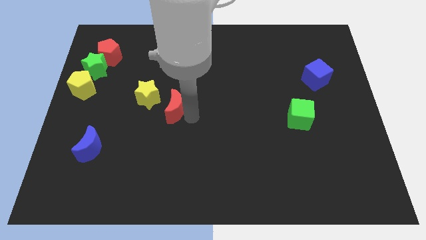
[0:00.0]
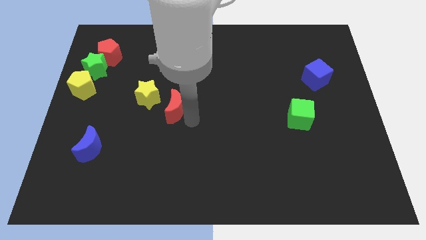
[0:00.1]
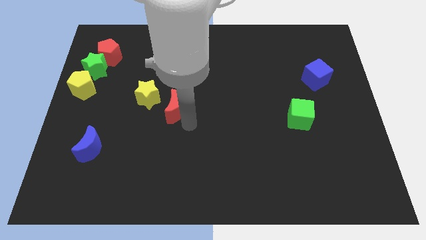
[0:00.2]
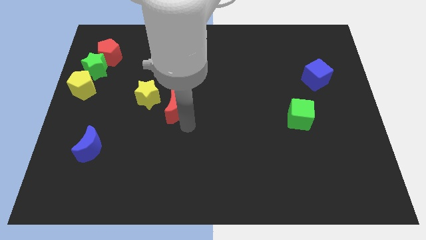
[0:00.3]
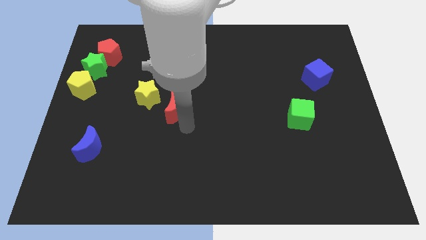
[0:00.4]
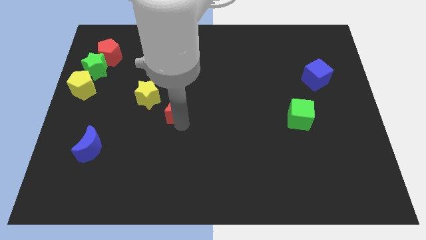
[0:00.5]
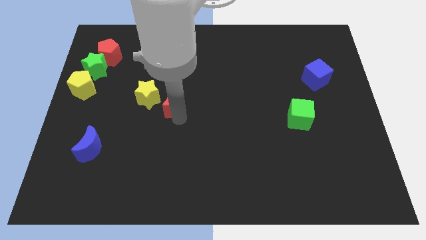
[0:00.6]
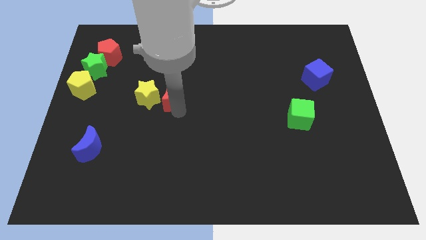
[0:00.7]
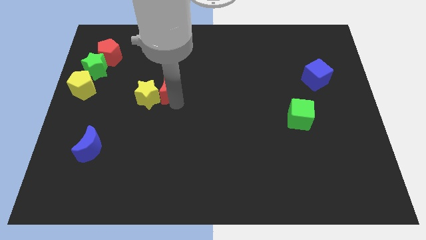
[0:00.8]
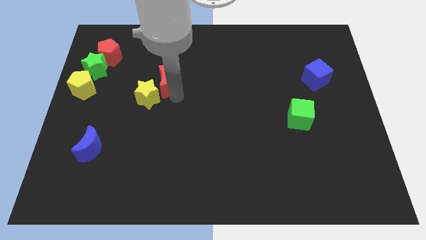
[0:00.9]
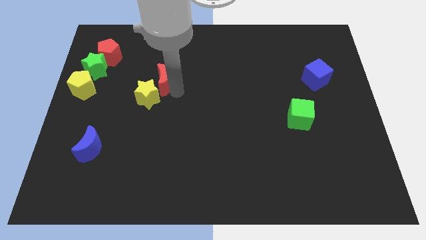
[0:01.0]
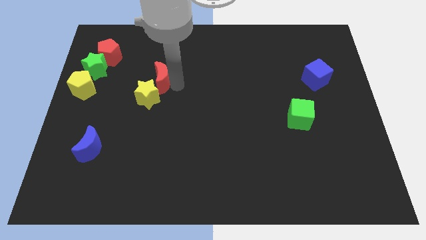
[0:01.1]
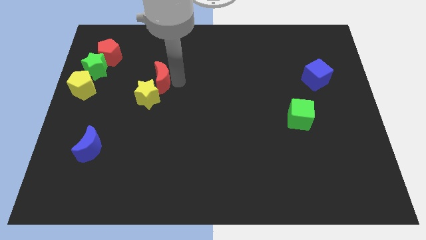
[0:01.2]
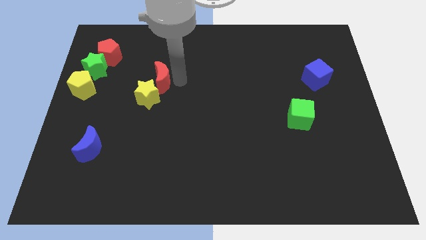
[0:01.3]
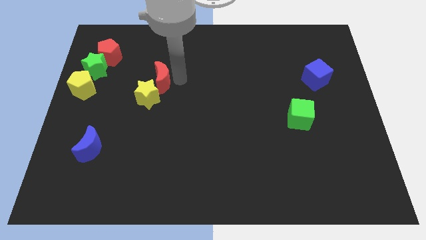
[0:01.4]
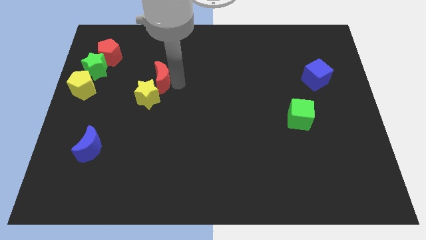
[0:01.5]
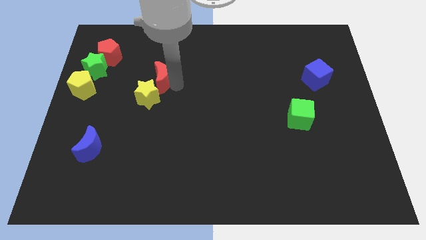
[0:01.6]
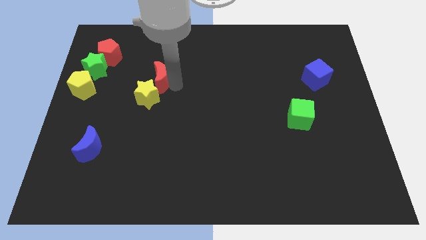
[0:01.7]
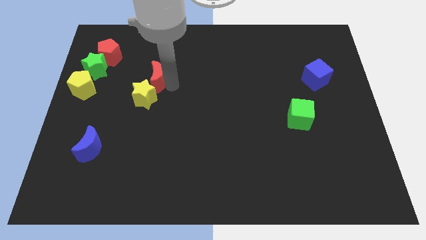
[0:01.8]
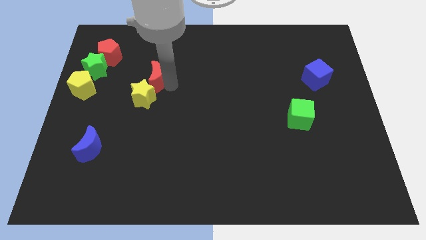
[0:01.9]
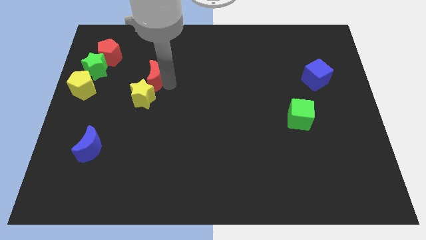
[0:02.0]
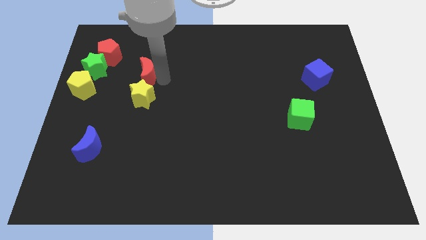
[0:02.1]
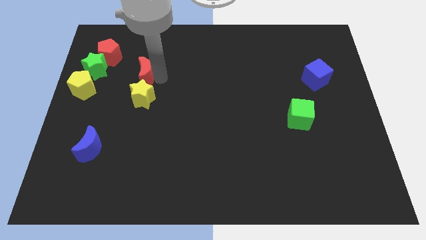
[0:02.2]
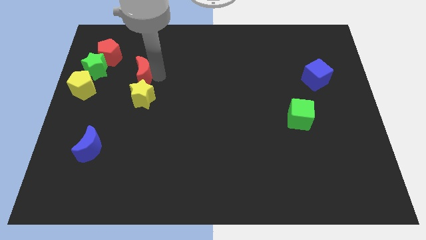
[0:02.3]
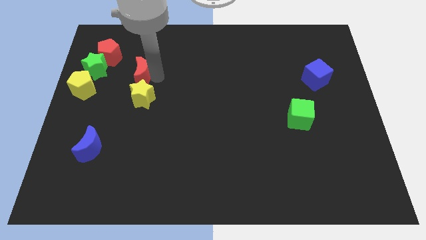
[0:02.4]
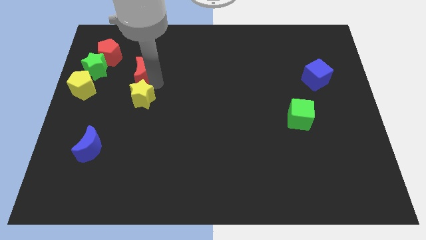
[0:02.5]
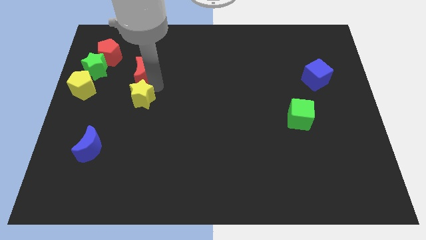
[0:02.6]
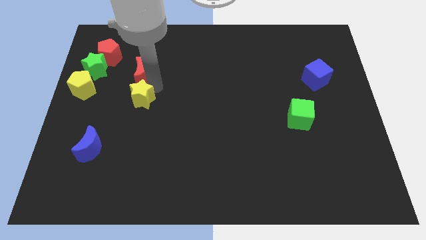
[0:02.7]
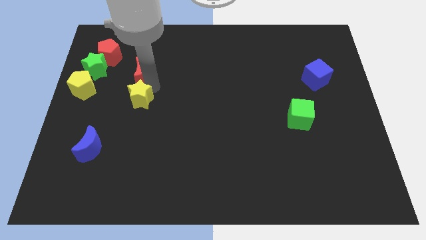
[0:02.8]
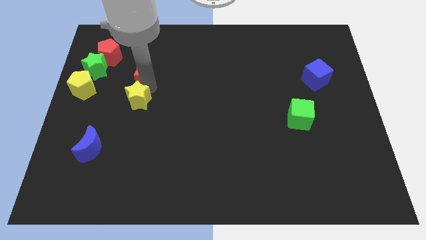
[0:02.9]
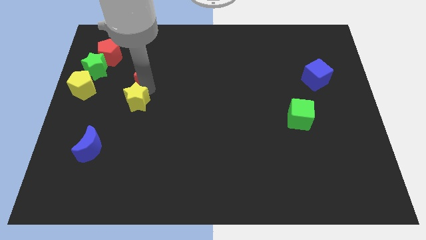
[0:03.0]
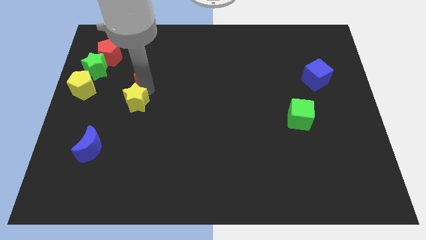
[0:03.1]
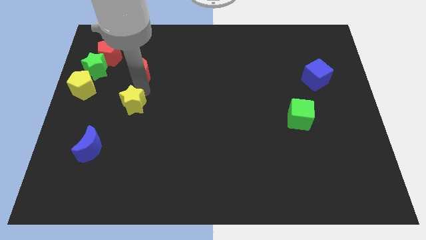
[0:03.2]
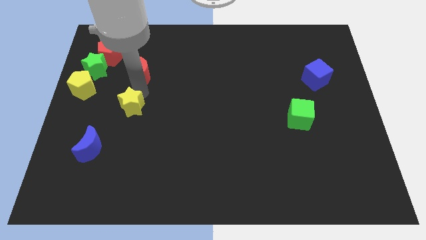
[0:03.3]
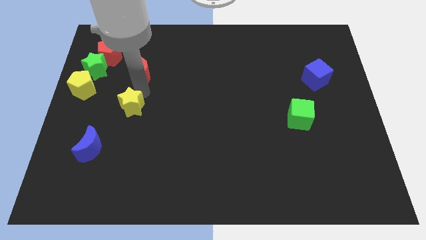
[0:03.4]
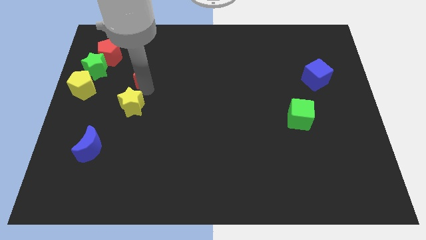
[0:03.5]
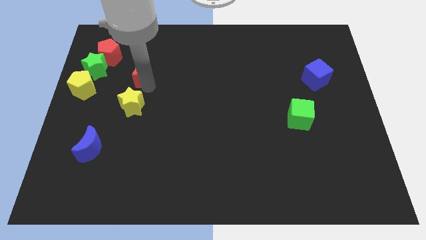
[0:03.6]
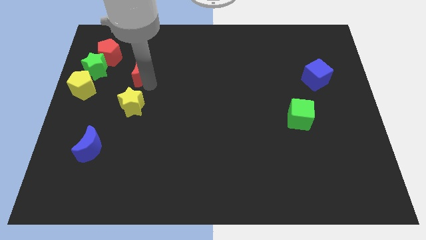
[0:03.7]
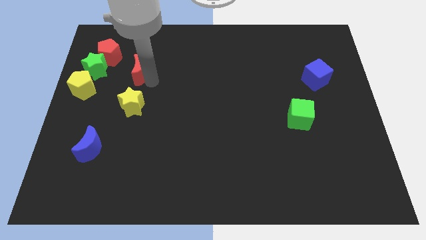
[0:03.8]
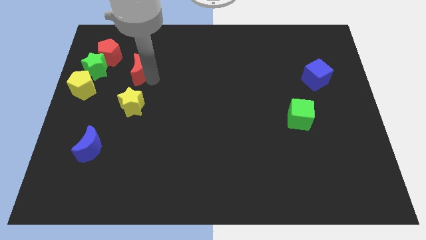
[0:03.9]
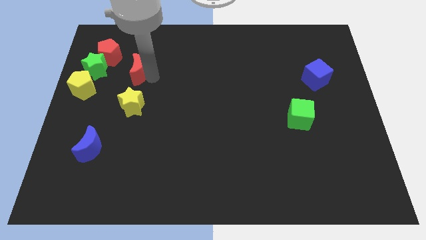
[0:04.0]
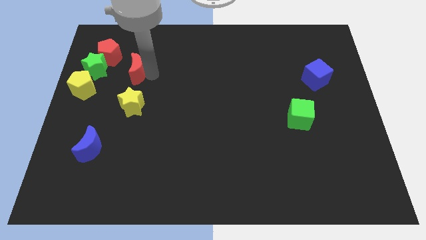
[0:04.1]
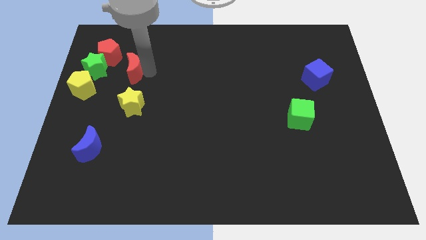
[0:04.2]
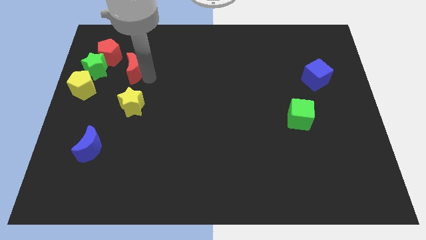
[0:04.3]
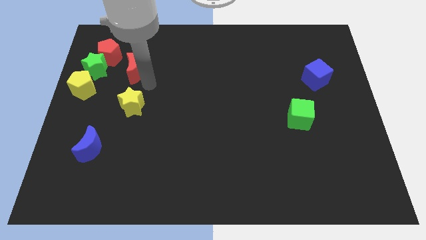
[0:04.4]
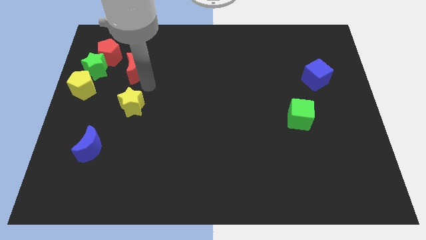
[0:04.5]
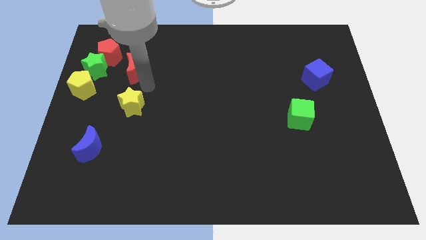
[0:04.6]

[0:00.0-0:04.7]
move the red crescent towards the top side of the yellow star

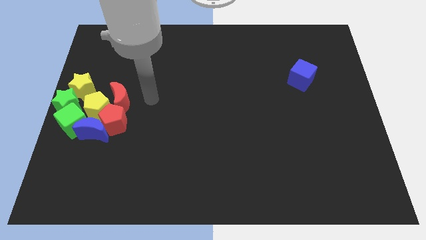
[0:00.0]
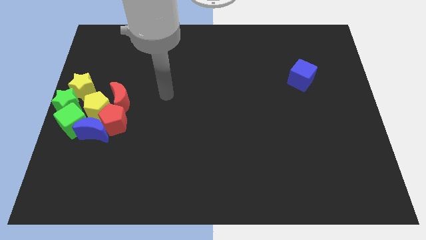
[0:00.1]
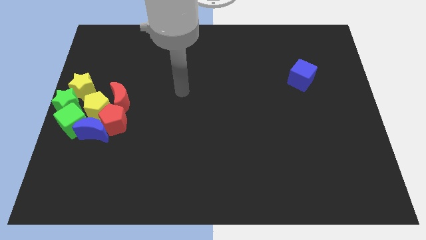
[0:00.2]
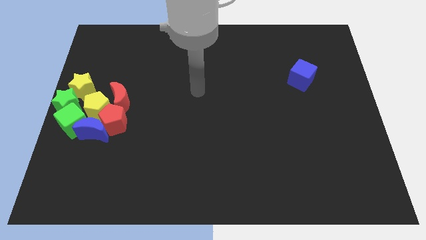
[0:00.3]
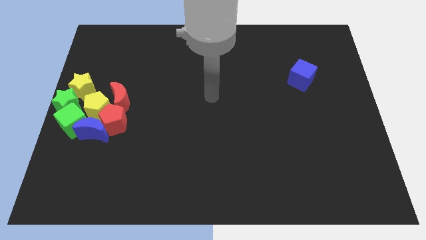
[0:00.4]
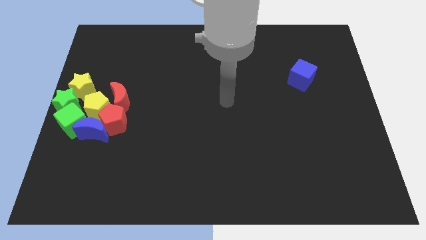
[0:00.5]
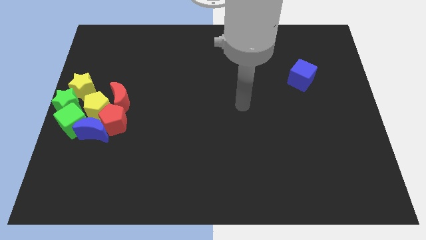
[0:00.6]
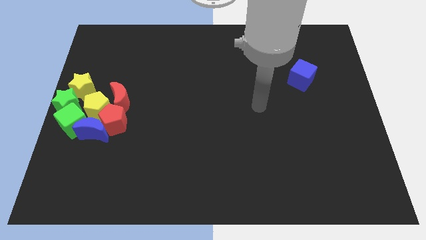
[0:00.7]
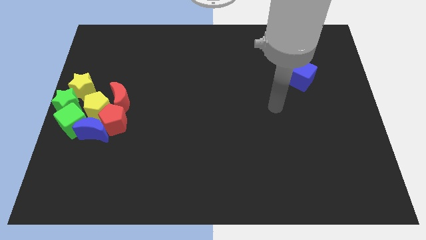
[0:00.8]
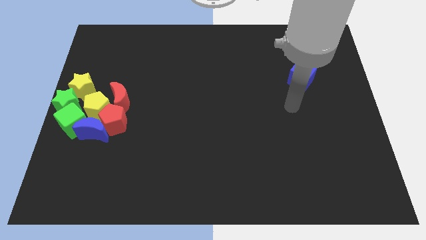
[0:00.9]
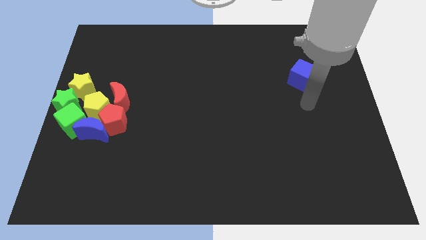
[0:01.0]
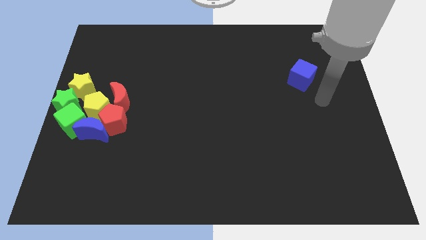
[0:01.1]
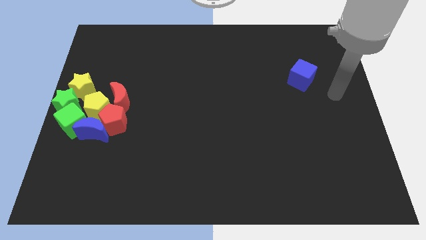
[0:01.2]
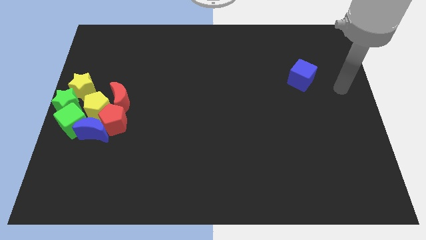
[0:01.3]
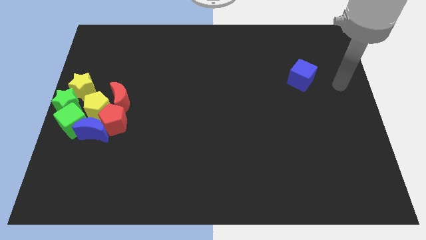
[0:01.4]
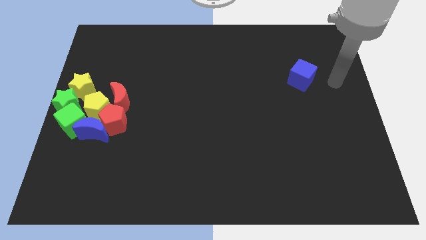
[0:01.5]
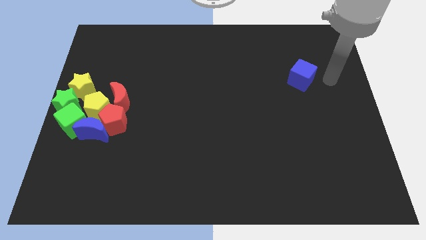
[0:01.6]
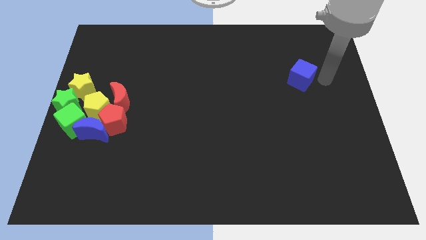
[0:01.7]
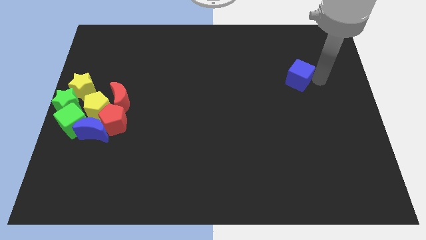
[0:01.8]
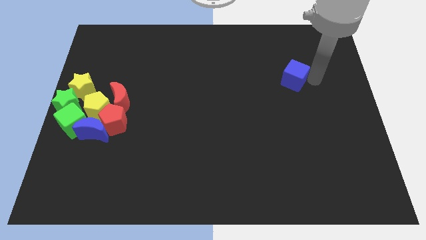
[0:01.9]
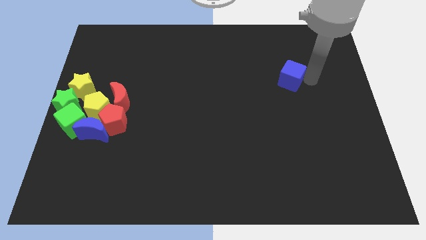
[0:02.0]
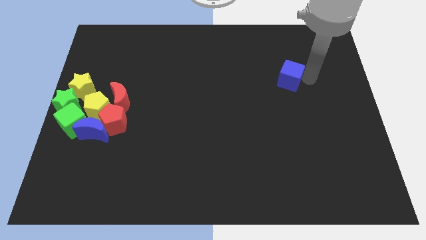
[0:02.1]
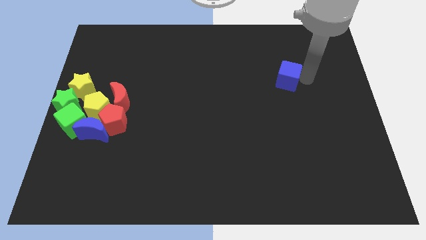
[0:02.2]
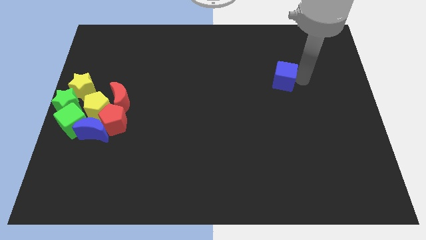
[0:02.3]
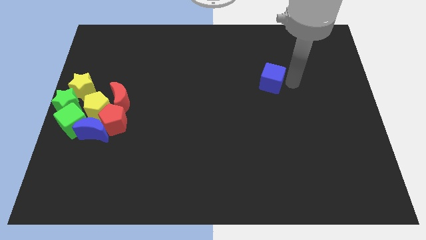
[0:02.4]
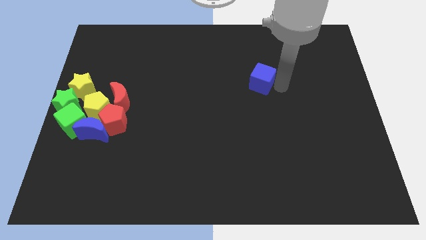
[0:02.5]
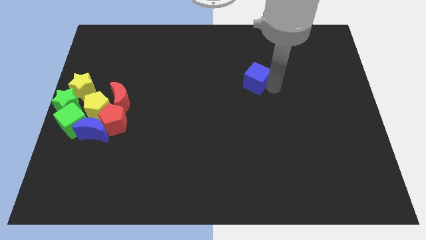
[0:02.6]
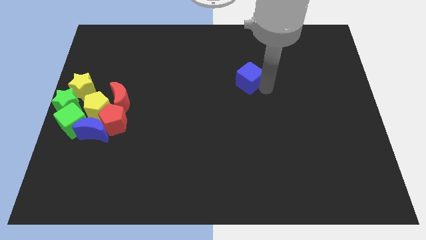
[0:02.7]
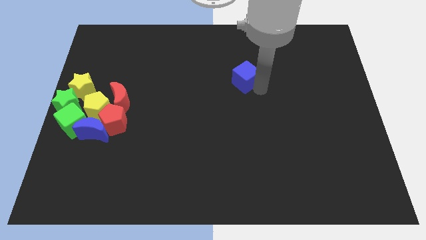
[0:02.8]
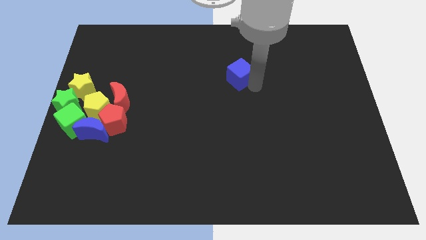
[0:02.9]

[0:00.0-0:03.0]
move the blue cube towards the center of the board

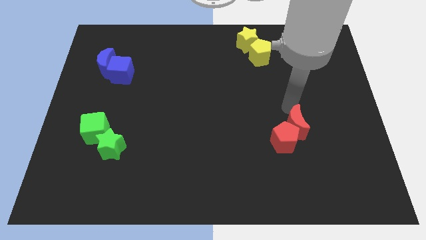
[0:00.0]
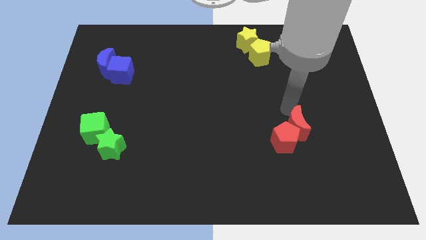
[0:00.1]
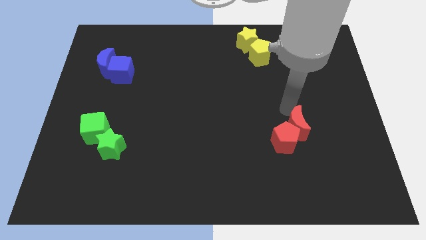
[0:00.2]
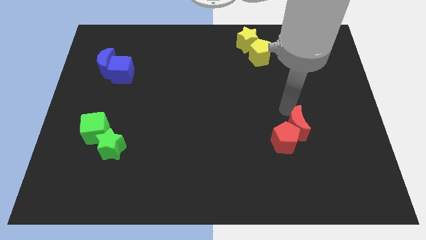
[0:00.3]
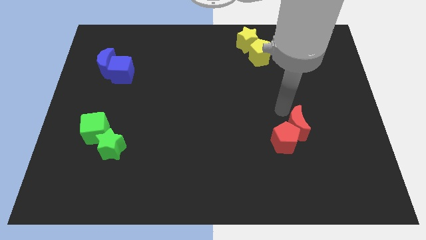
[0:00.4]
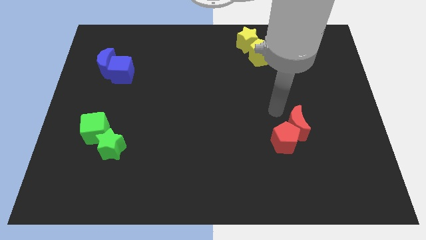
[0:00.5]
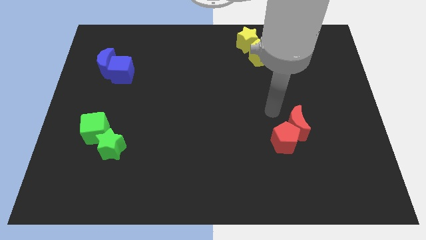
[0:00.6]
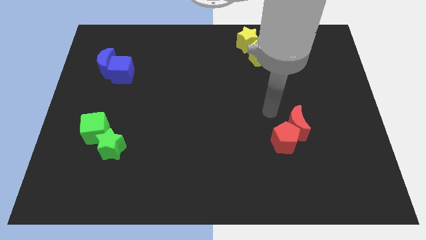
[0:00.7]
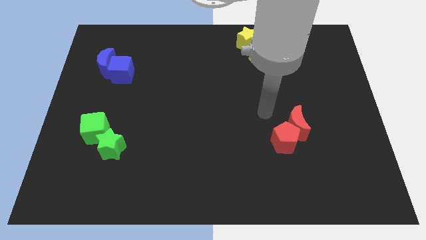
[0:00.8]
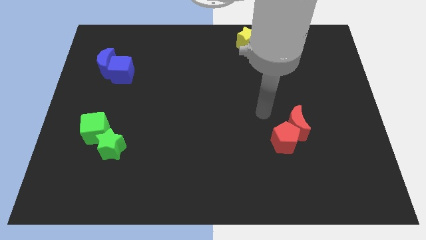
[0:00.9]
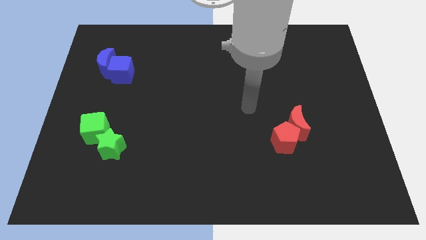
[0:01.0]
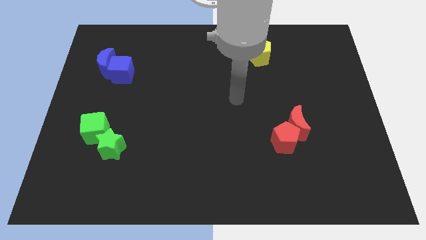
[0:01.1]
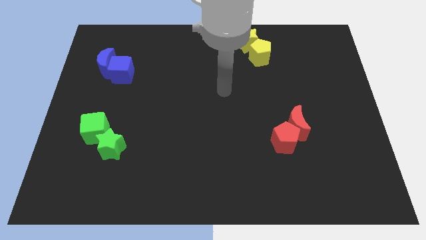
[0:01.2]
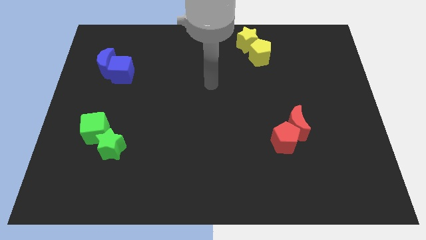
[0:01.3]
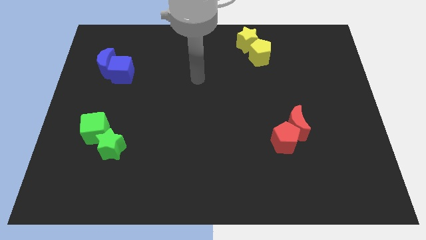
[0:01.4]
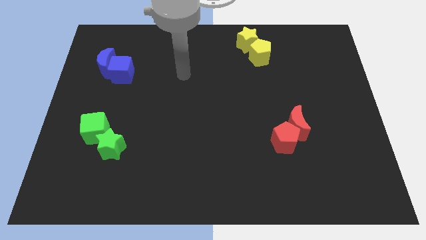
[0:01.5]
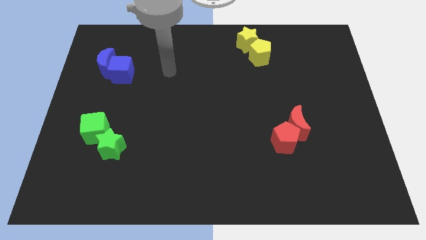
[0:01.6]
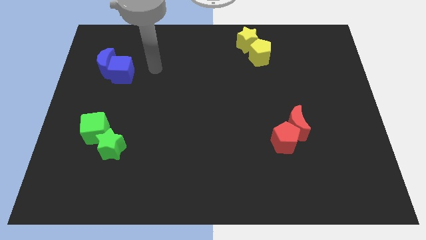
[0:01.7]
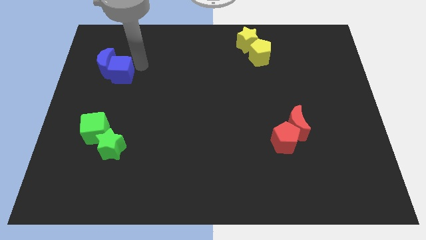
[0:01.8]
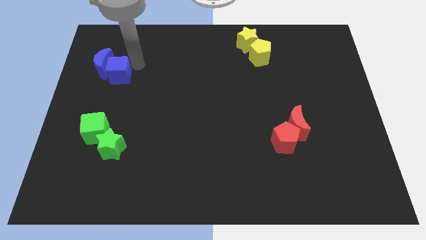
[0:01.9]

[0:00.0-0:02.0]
move the arm from the right center to the left top of the board
